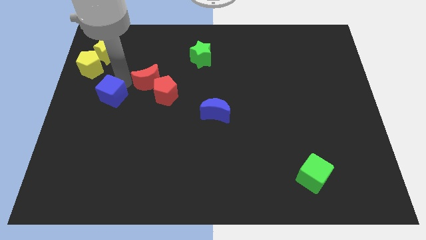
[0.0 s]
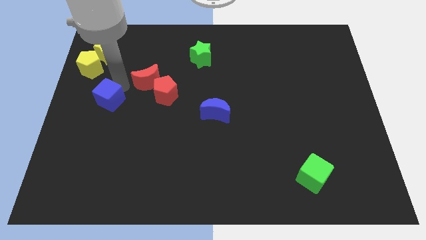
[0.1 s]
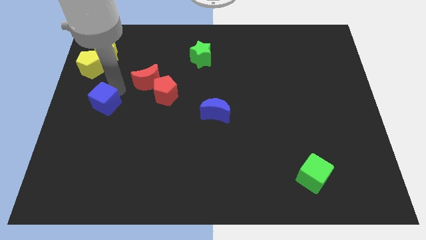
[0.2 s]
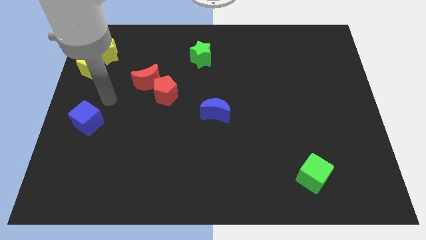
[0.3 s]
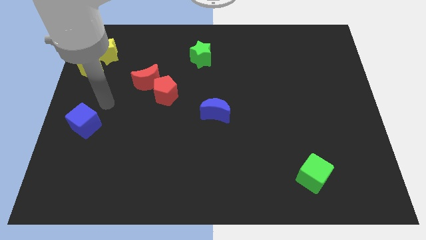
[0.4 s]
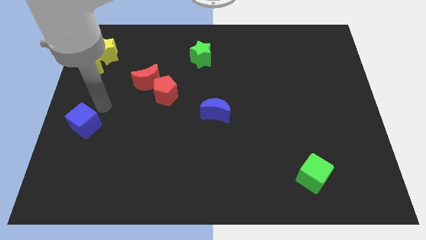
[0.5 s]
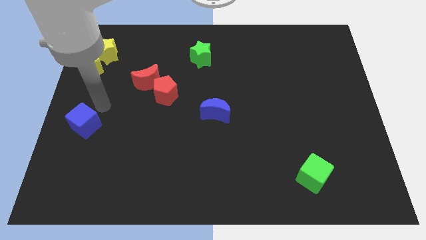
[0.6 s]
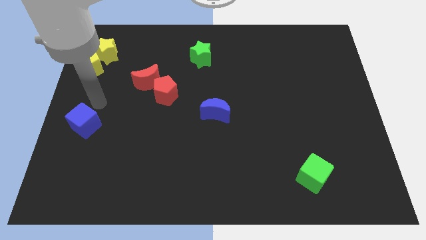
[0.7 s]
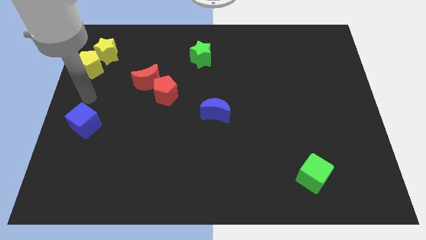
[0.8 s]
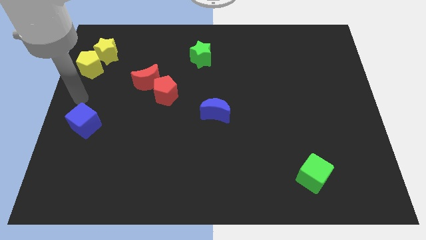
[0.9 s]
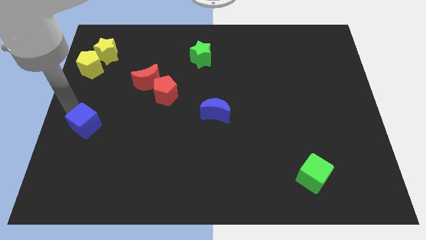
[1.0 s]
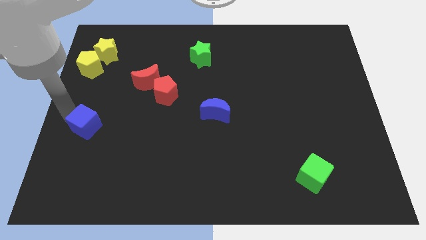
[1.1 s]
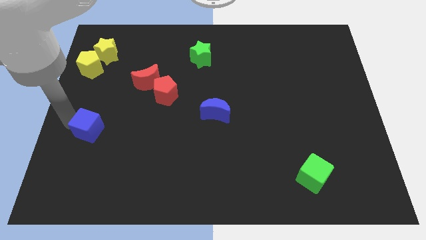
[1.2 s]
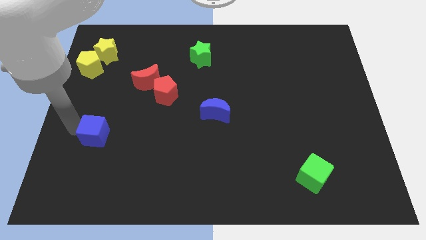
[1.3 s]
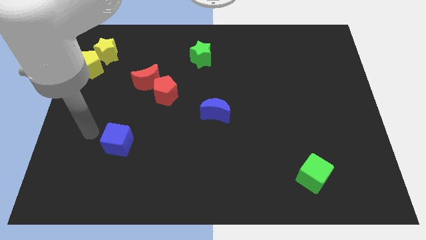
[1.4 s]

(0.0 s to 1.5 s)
push the blue cube diagonally to the bottom left of the red pentagon

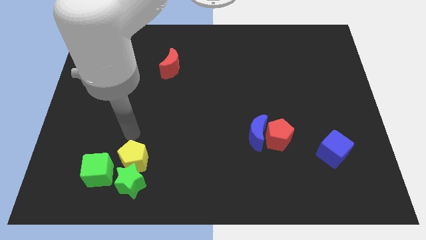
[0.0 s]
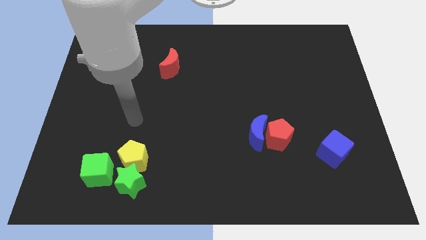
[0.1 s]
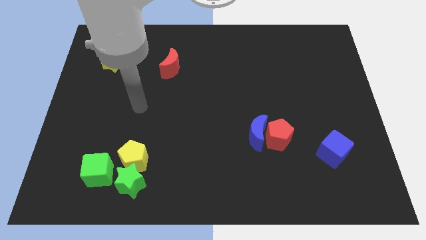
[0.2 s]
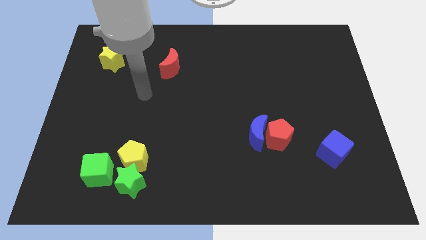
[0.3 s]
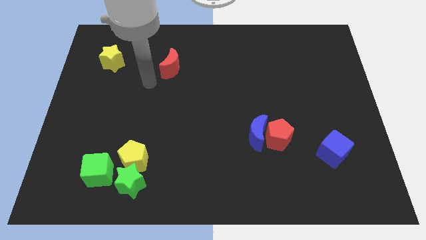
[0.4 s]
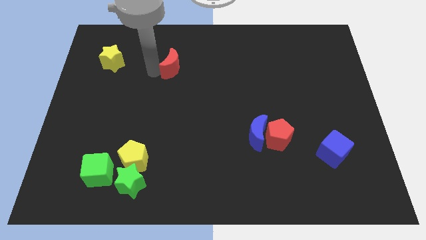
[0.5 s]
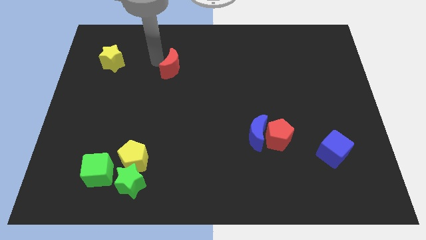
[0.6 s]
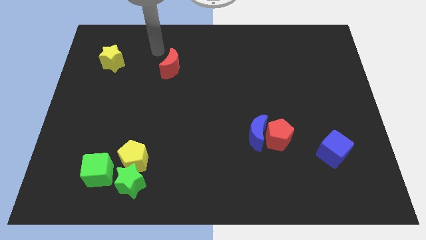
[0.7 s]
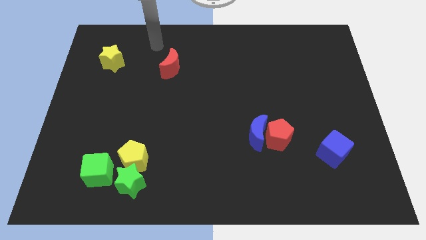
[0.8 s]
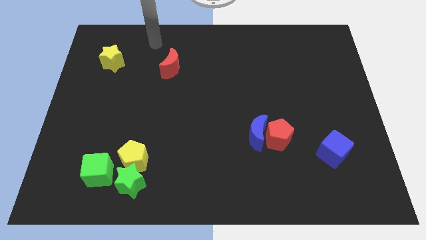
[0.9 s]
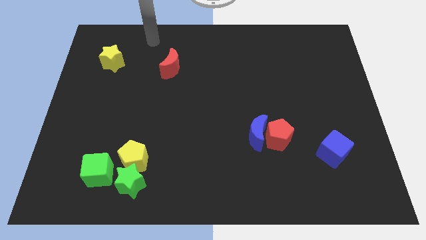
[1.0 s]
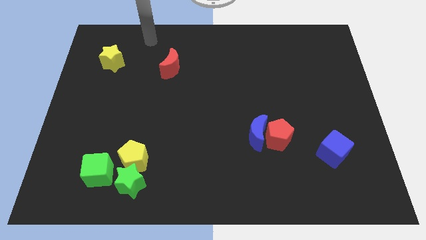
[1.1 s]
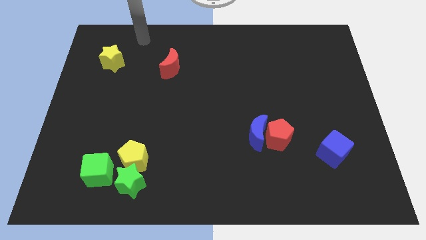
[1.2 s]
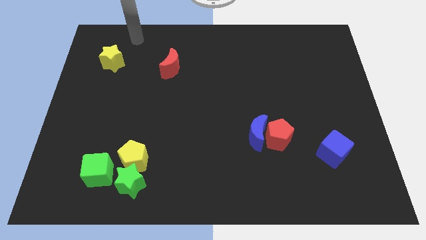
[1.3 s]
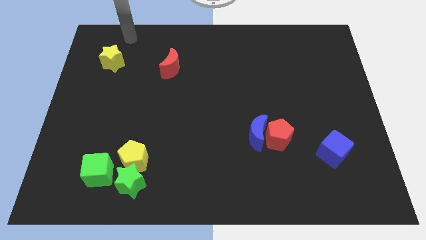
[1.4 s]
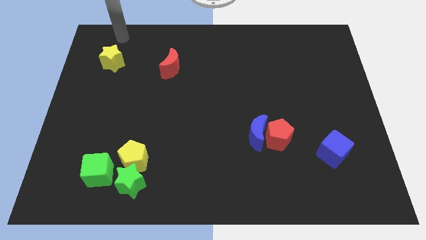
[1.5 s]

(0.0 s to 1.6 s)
go away from the yellow pentagon

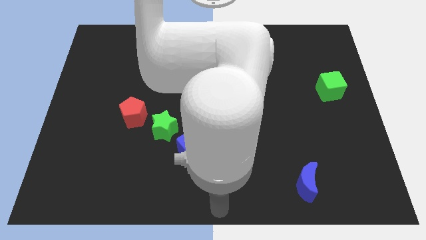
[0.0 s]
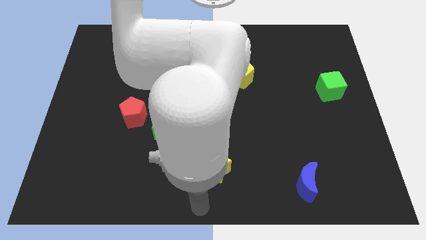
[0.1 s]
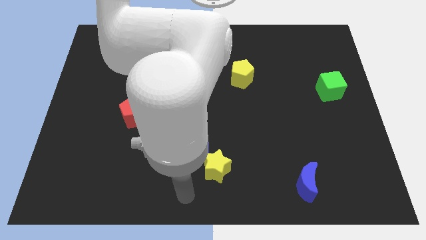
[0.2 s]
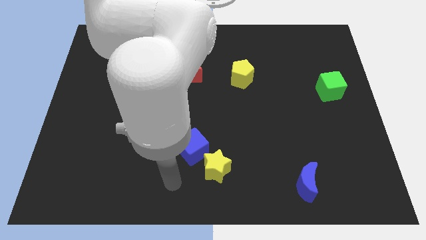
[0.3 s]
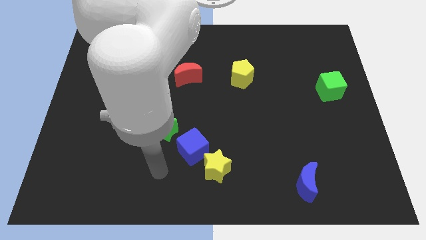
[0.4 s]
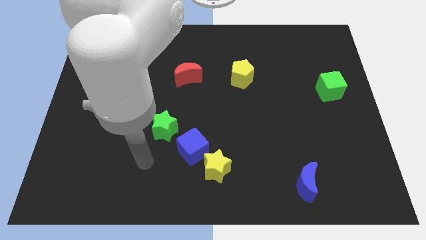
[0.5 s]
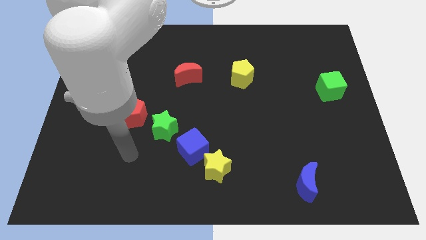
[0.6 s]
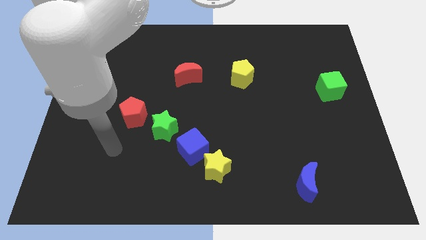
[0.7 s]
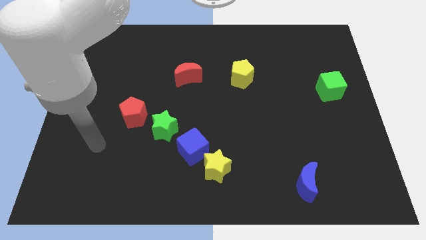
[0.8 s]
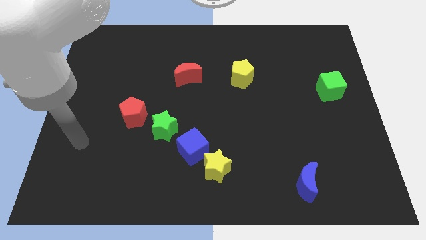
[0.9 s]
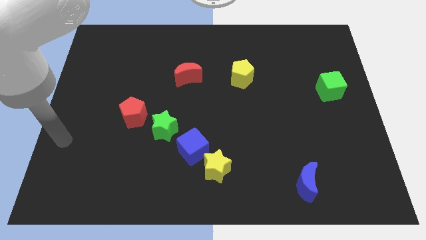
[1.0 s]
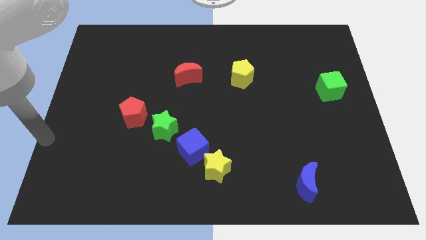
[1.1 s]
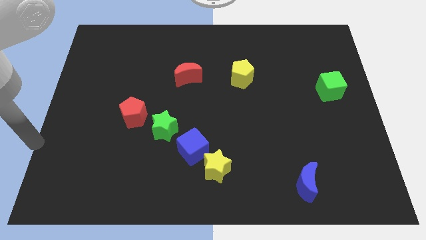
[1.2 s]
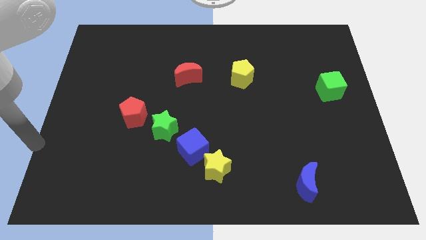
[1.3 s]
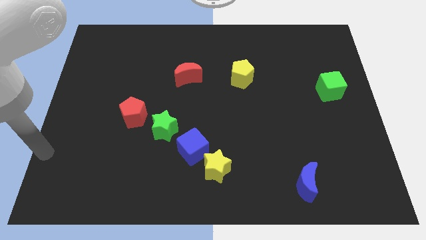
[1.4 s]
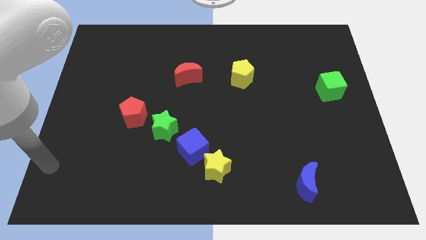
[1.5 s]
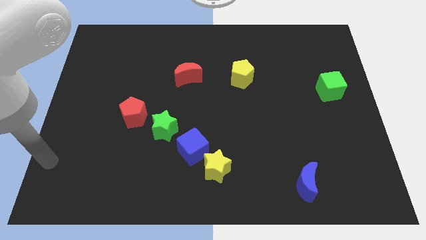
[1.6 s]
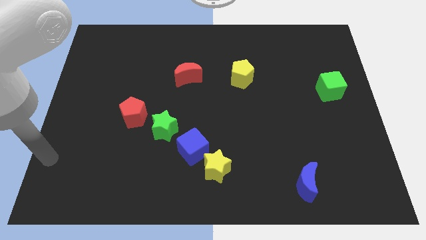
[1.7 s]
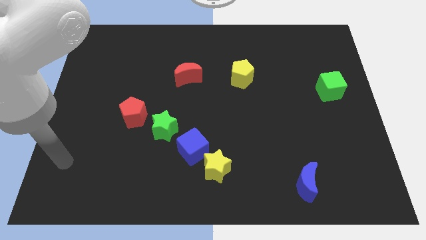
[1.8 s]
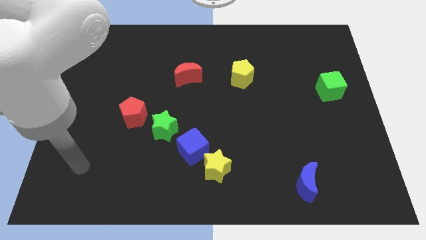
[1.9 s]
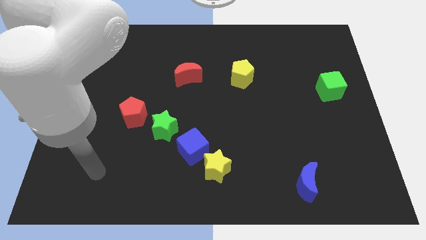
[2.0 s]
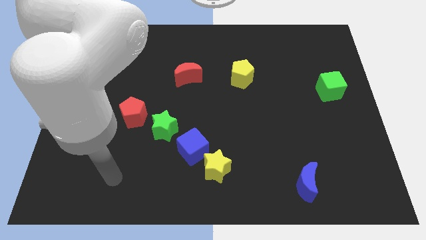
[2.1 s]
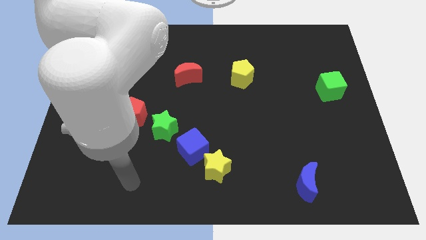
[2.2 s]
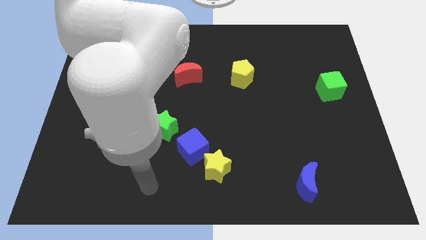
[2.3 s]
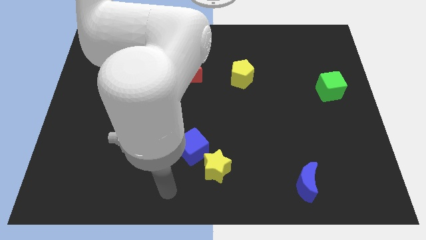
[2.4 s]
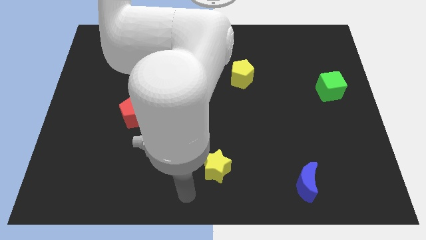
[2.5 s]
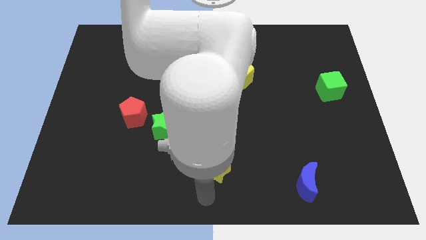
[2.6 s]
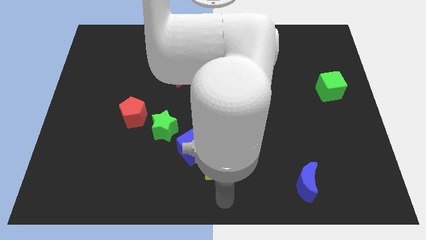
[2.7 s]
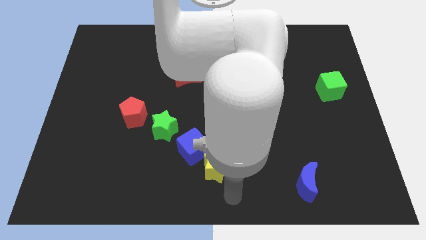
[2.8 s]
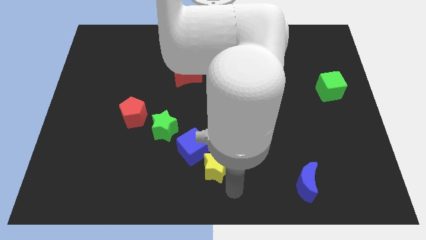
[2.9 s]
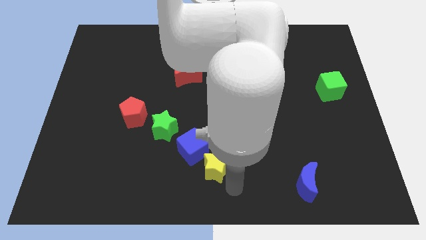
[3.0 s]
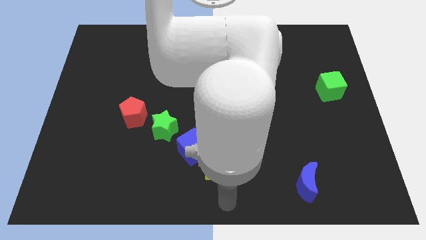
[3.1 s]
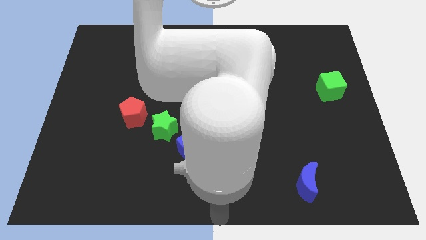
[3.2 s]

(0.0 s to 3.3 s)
move your arm at the bottom center of the board

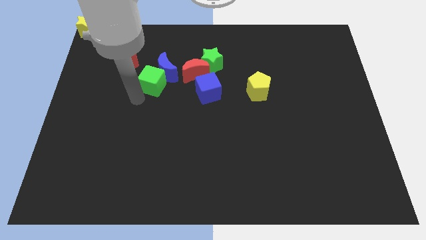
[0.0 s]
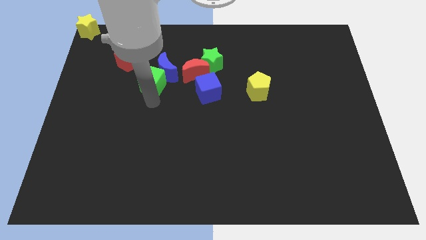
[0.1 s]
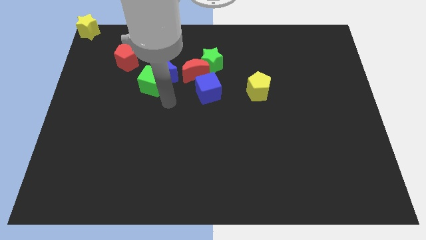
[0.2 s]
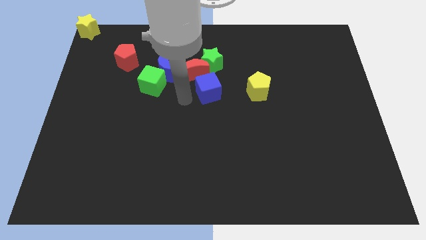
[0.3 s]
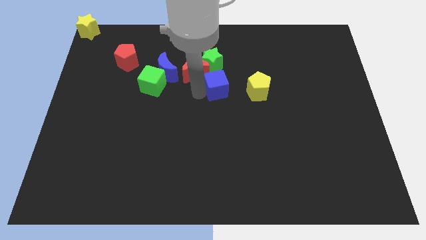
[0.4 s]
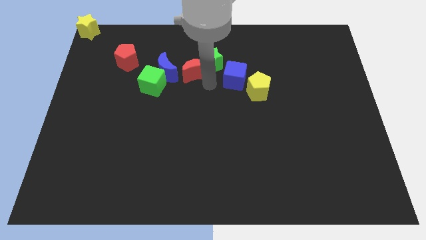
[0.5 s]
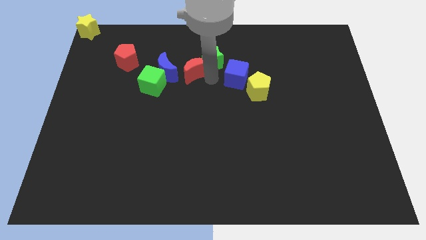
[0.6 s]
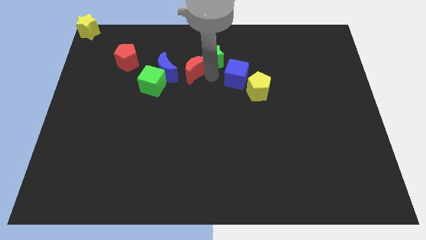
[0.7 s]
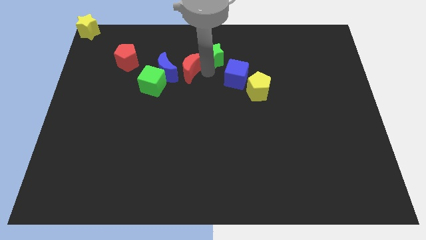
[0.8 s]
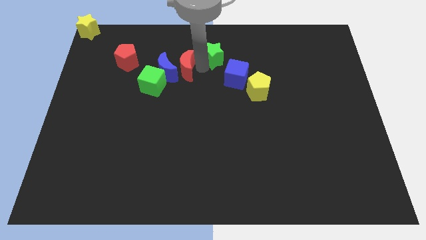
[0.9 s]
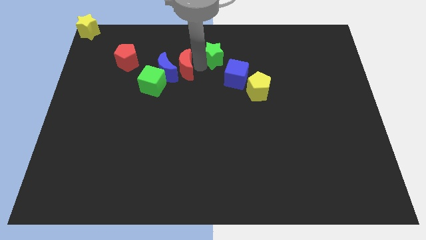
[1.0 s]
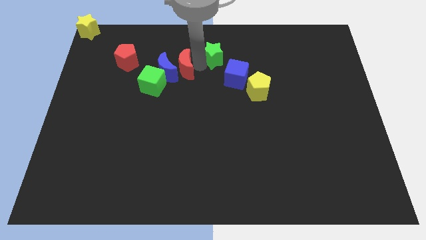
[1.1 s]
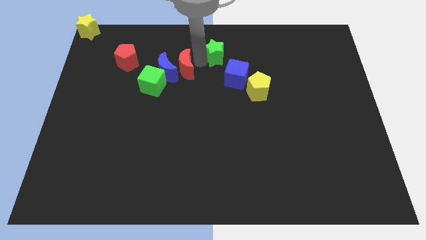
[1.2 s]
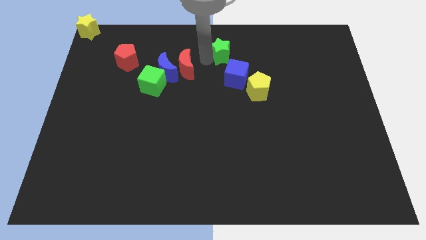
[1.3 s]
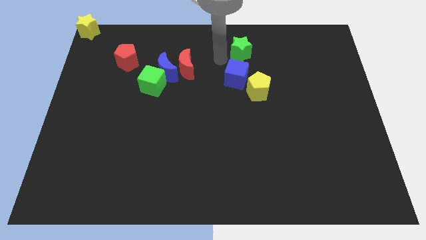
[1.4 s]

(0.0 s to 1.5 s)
separate the red moon and the green star

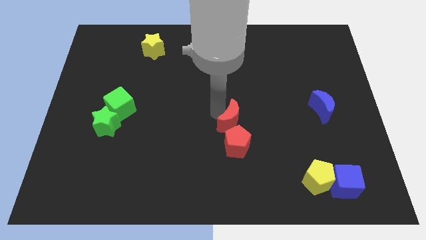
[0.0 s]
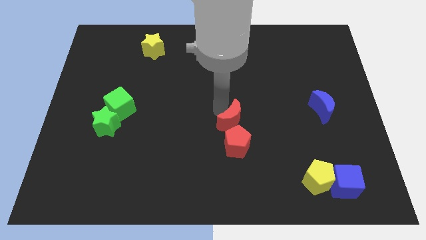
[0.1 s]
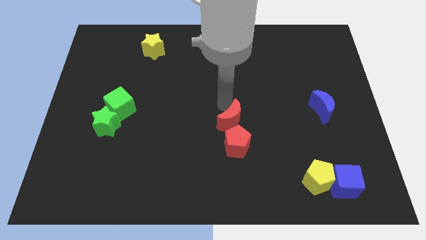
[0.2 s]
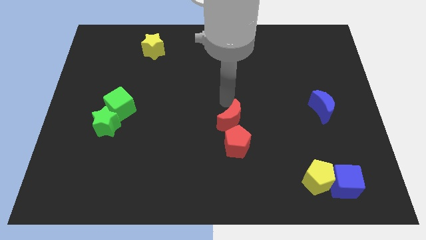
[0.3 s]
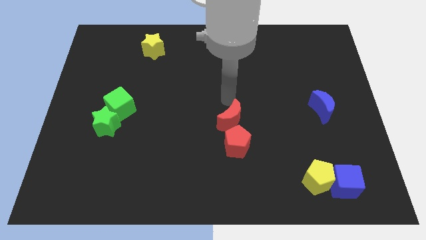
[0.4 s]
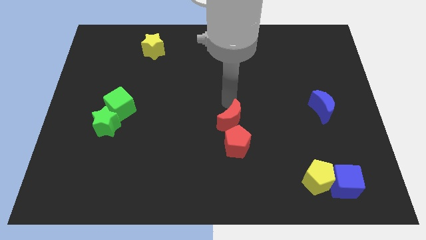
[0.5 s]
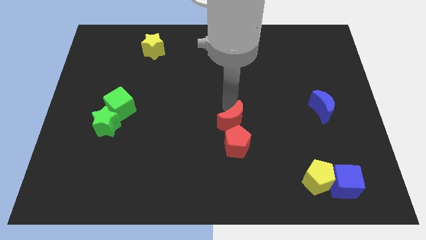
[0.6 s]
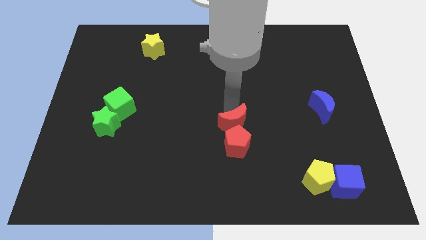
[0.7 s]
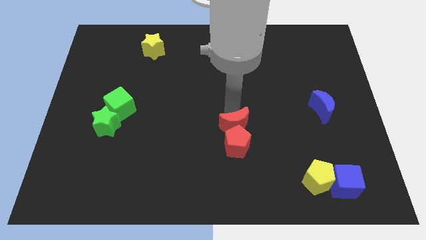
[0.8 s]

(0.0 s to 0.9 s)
place the red crescent above the red pentagon
